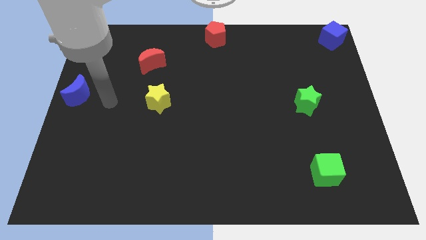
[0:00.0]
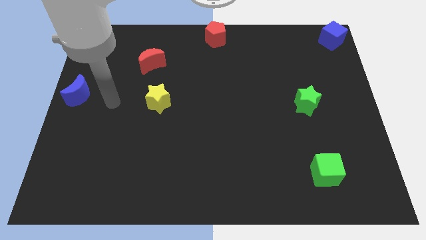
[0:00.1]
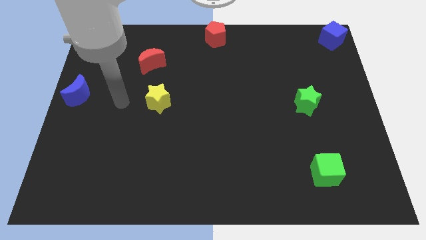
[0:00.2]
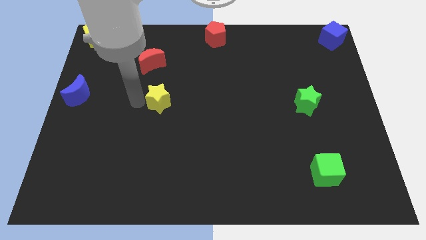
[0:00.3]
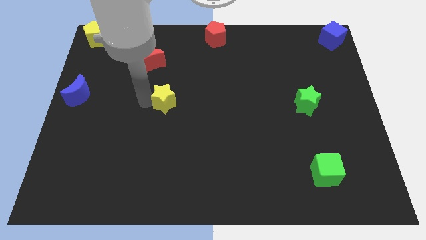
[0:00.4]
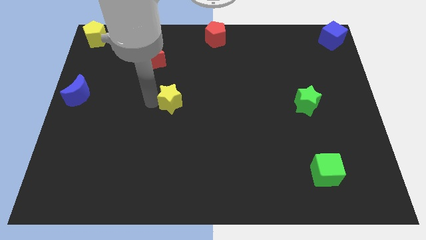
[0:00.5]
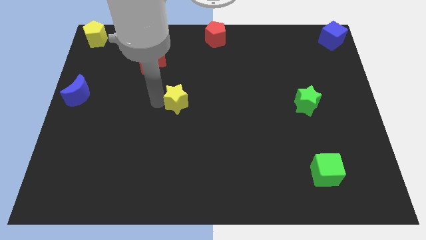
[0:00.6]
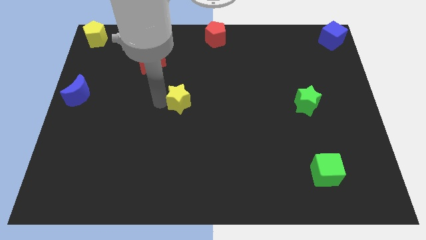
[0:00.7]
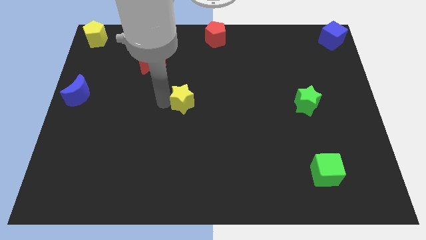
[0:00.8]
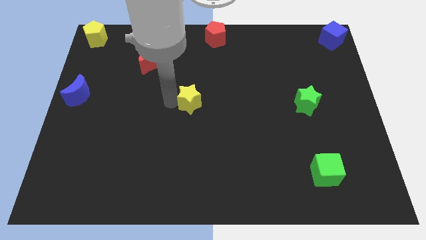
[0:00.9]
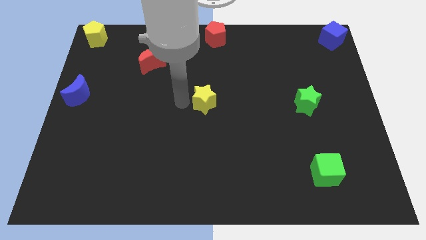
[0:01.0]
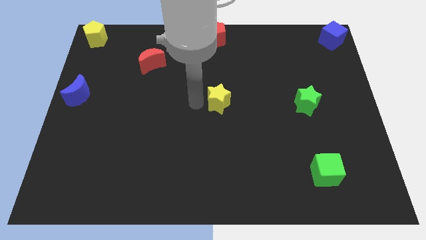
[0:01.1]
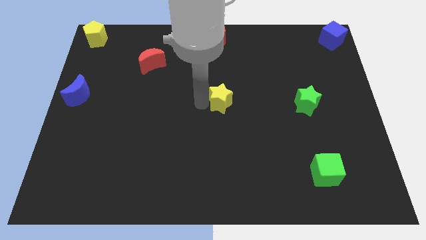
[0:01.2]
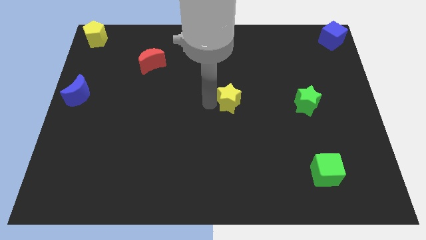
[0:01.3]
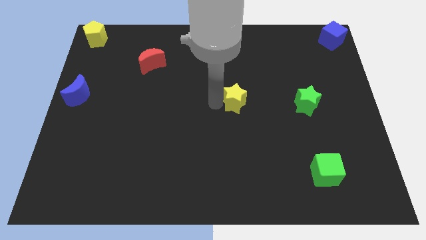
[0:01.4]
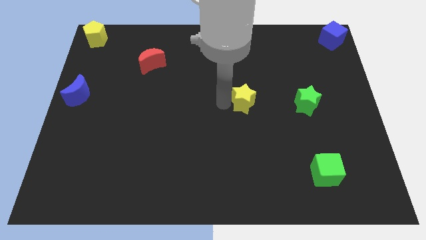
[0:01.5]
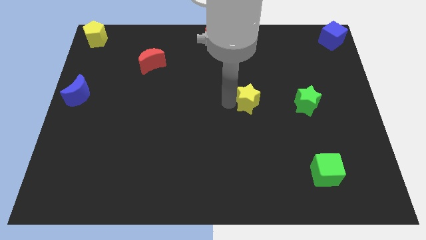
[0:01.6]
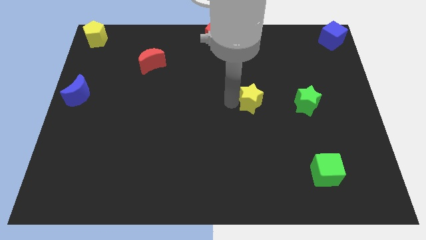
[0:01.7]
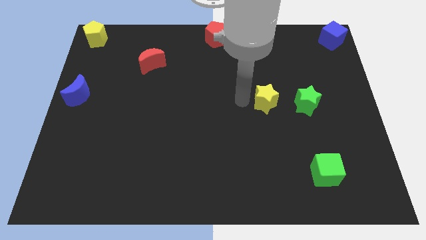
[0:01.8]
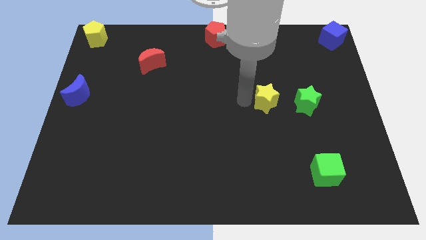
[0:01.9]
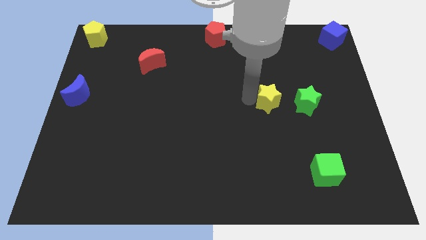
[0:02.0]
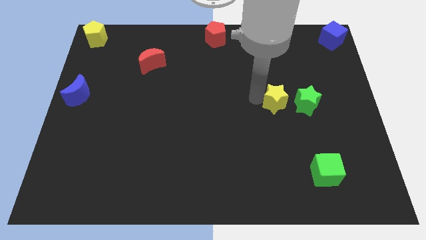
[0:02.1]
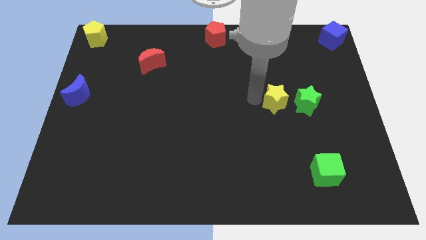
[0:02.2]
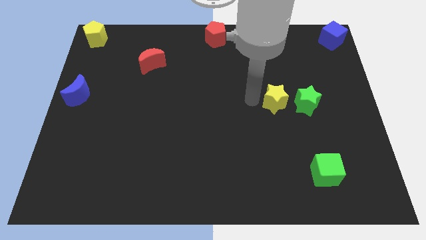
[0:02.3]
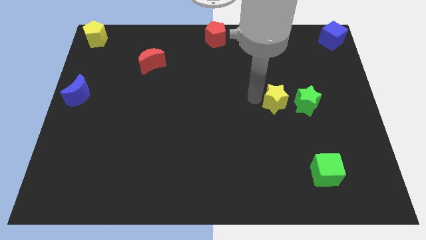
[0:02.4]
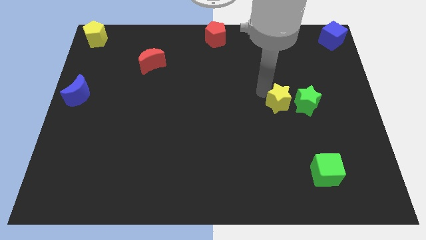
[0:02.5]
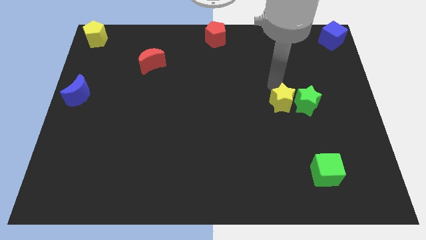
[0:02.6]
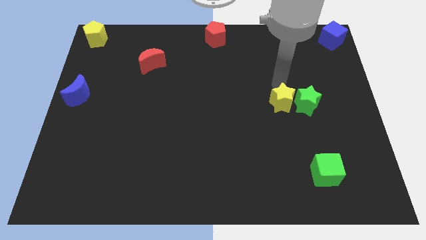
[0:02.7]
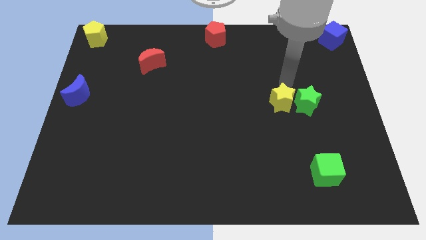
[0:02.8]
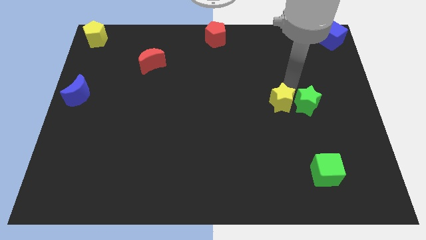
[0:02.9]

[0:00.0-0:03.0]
place the yellow star to the left side of the green star

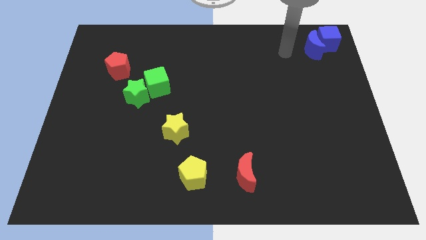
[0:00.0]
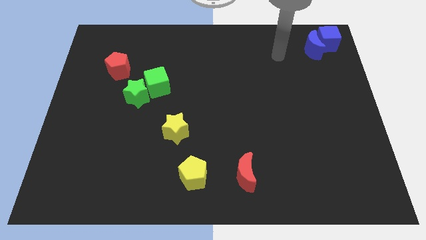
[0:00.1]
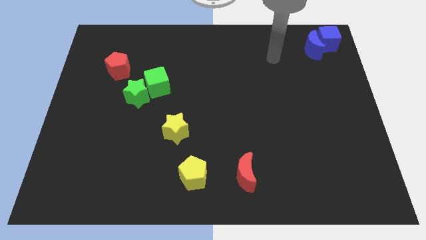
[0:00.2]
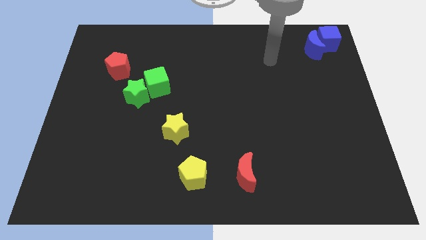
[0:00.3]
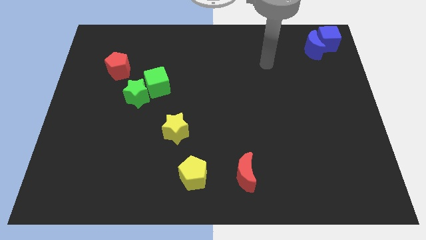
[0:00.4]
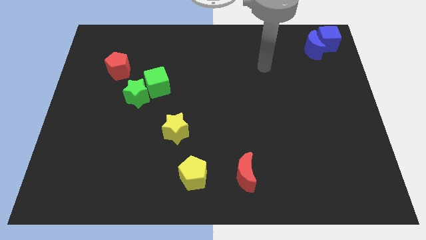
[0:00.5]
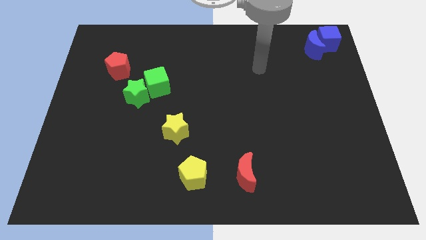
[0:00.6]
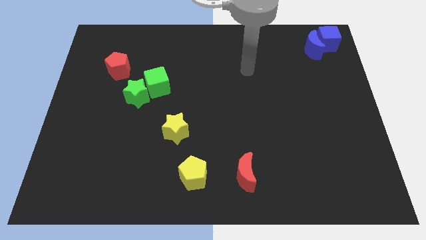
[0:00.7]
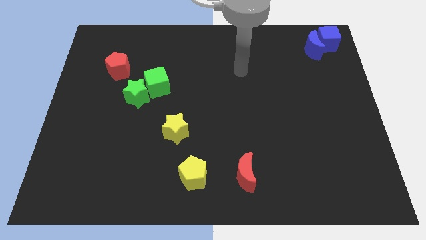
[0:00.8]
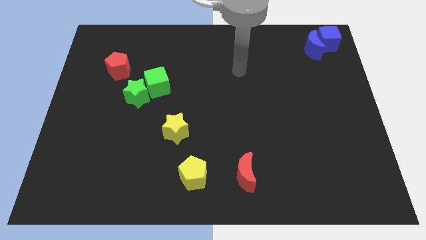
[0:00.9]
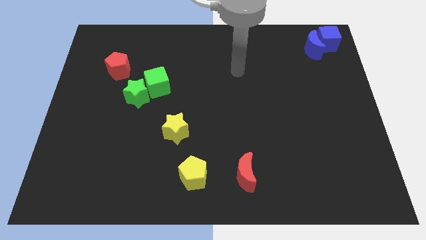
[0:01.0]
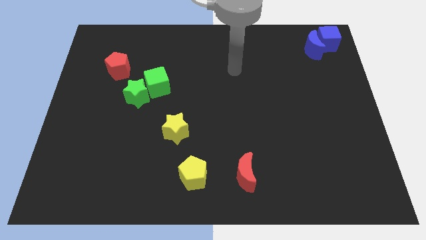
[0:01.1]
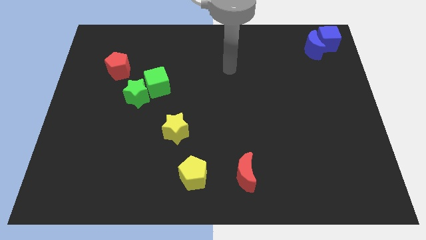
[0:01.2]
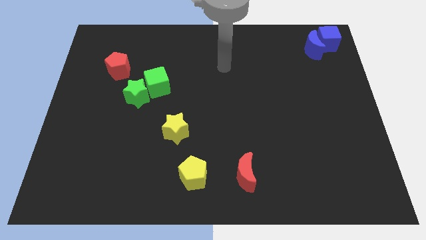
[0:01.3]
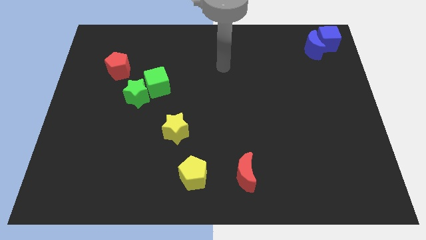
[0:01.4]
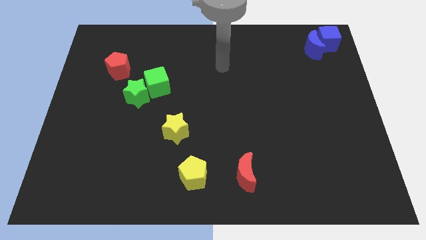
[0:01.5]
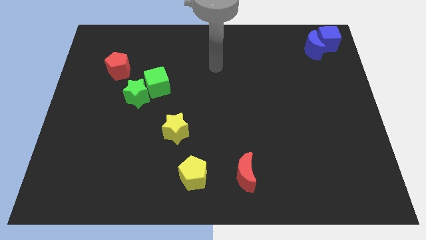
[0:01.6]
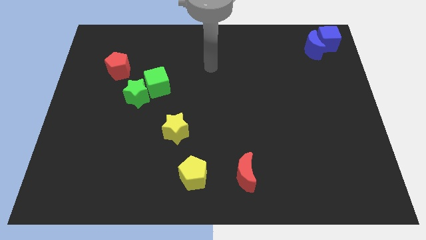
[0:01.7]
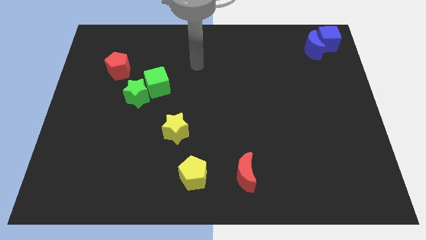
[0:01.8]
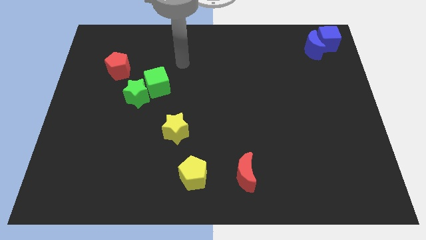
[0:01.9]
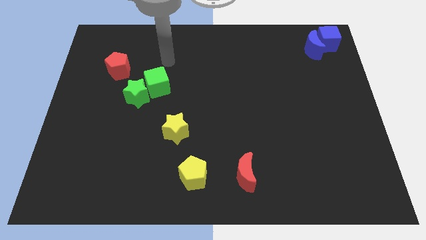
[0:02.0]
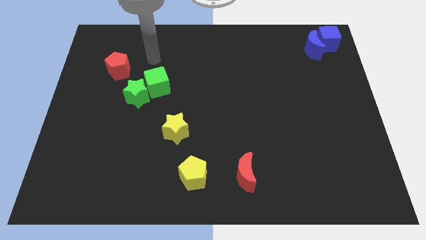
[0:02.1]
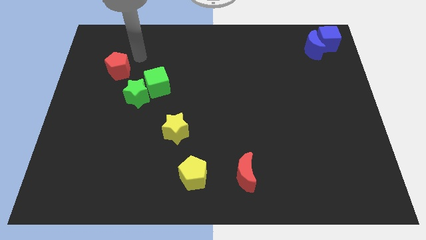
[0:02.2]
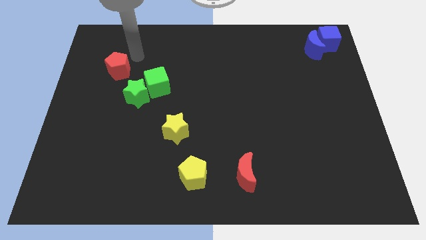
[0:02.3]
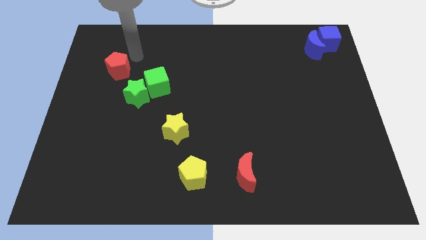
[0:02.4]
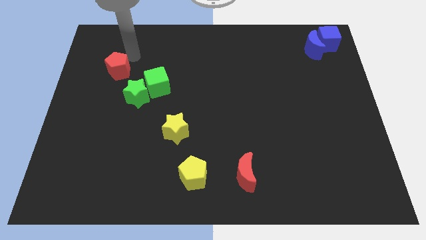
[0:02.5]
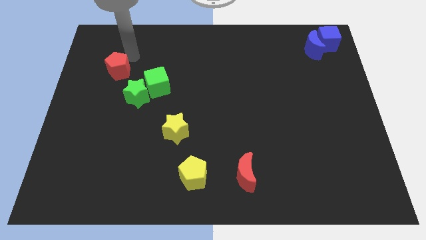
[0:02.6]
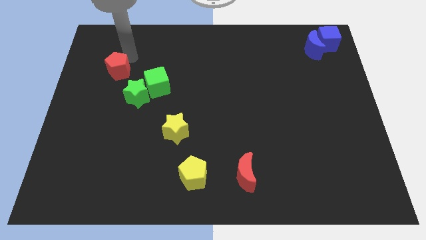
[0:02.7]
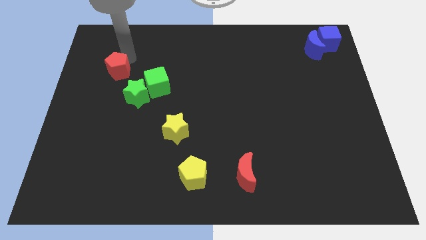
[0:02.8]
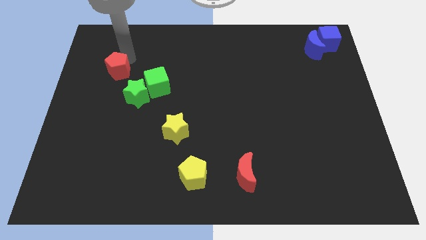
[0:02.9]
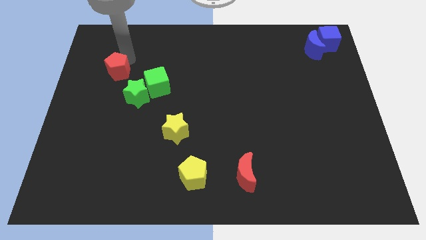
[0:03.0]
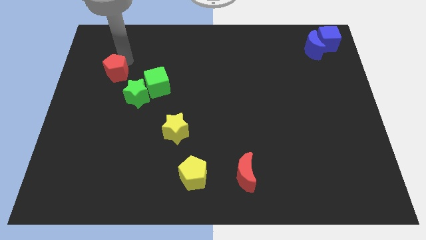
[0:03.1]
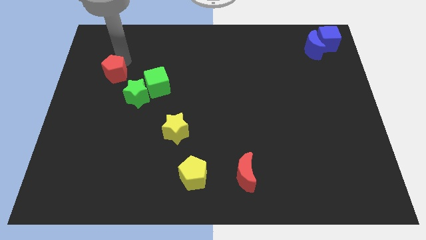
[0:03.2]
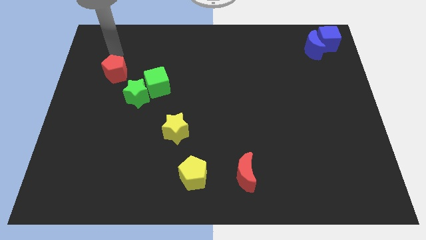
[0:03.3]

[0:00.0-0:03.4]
move your hand to the red pentagon

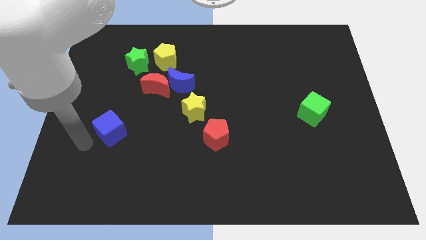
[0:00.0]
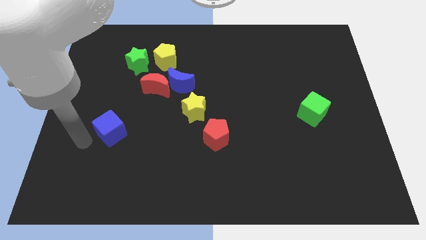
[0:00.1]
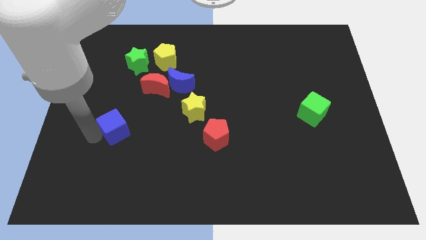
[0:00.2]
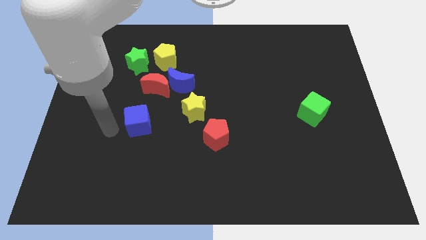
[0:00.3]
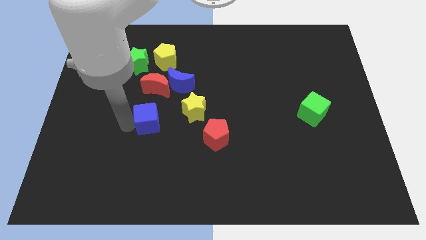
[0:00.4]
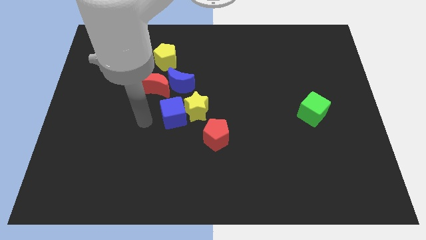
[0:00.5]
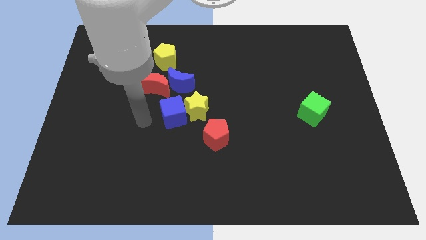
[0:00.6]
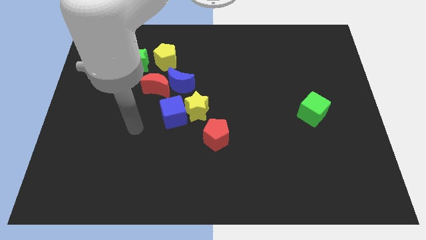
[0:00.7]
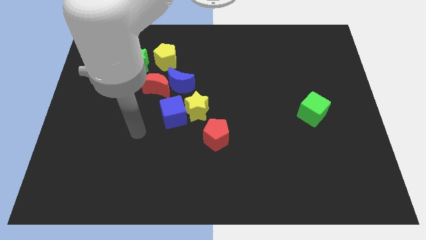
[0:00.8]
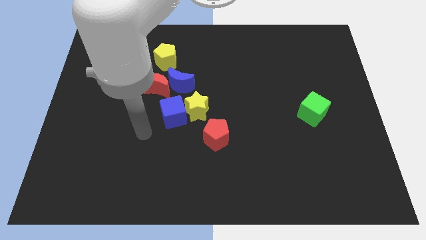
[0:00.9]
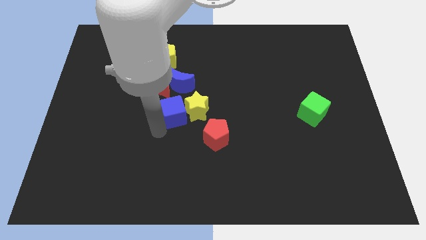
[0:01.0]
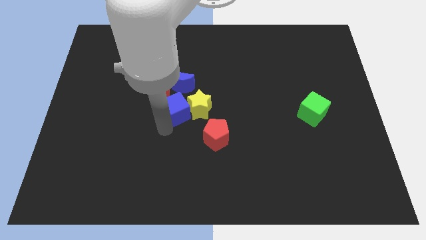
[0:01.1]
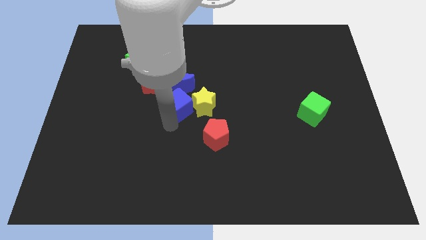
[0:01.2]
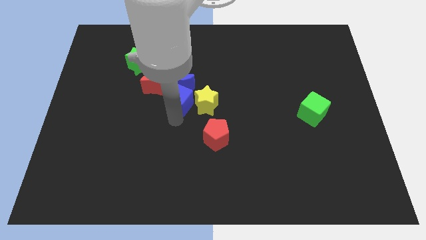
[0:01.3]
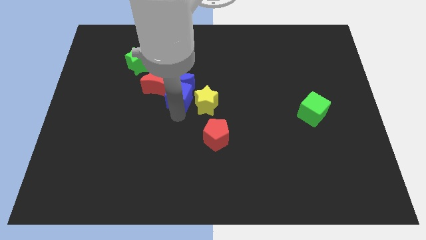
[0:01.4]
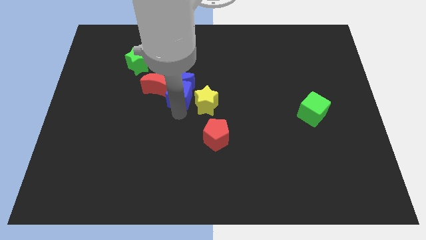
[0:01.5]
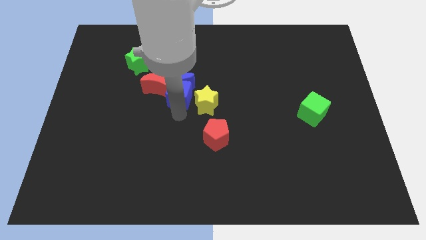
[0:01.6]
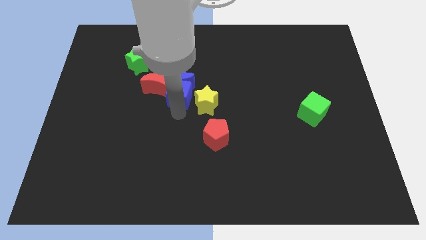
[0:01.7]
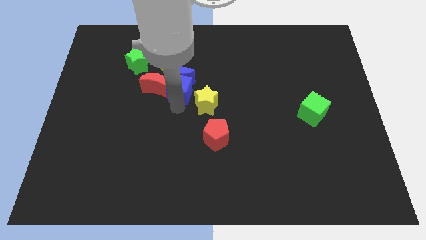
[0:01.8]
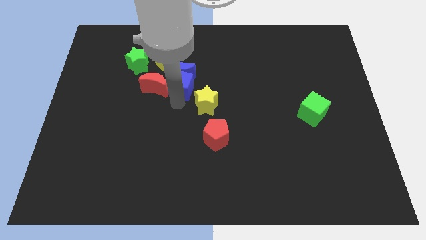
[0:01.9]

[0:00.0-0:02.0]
move blue cube below the blue moon

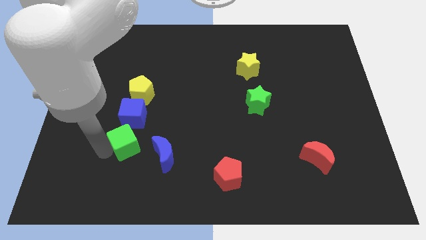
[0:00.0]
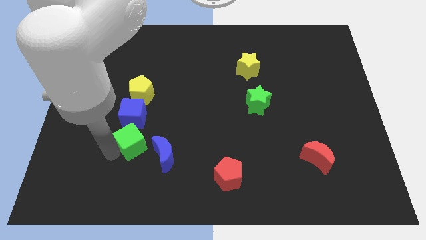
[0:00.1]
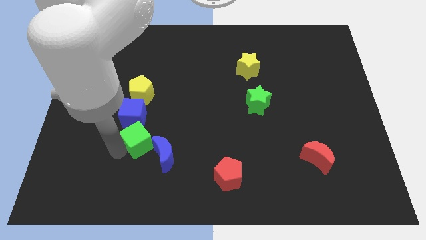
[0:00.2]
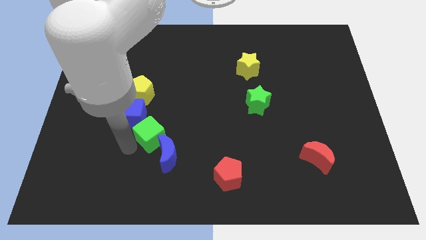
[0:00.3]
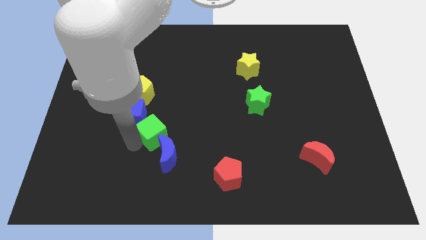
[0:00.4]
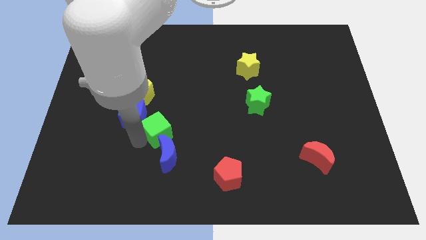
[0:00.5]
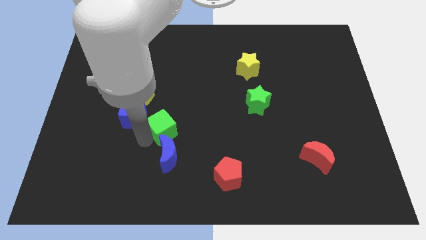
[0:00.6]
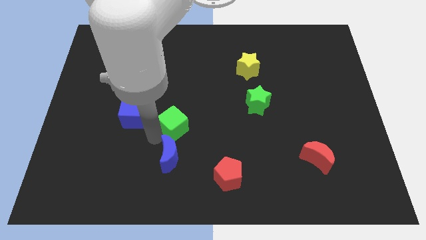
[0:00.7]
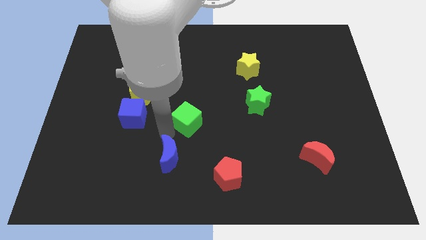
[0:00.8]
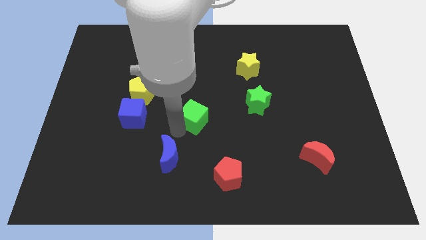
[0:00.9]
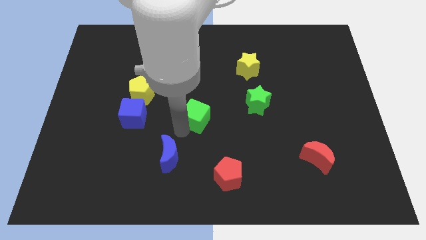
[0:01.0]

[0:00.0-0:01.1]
move the green cube towards the centre
